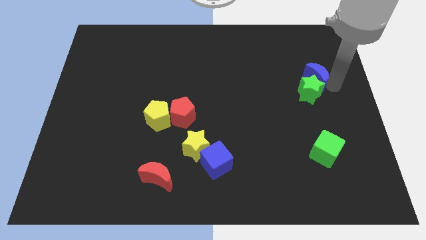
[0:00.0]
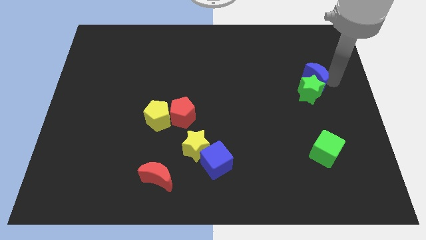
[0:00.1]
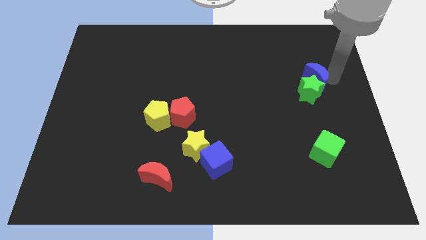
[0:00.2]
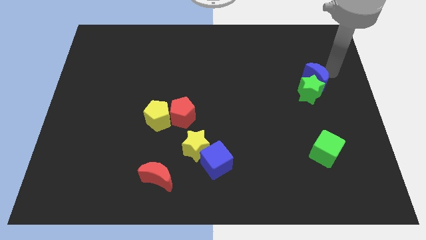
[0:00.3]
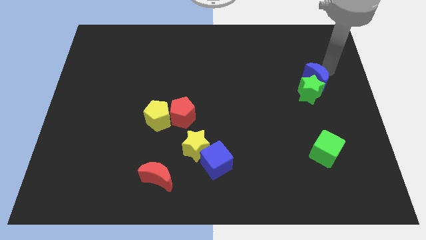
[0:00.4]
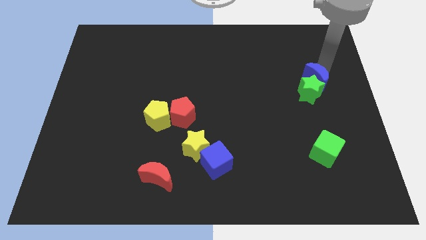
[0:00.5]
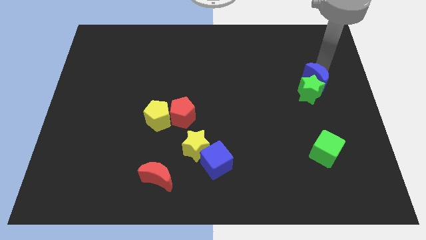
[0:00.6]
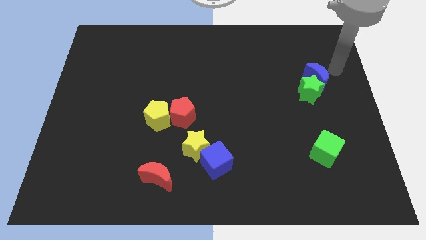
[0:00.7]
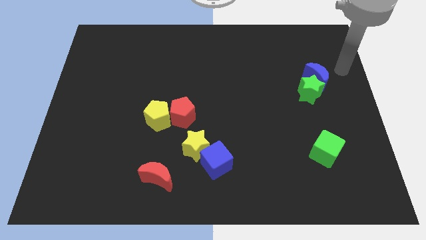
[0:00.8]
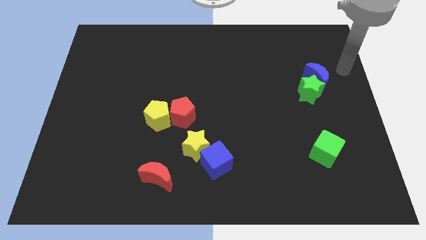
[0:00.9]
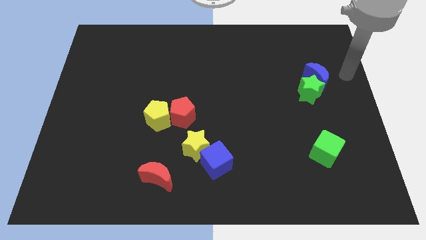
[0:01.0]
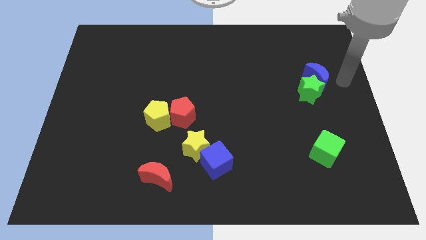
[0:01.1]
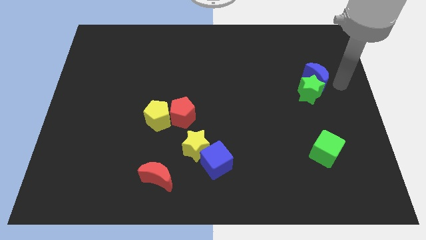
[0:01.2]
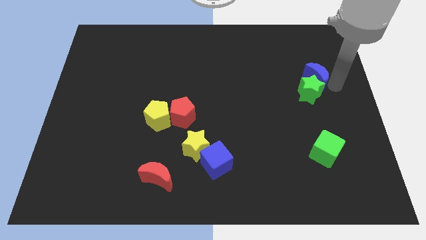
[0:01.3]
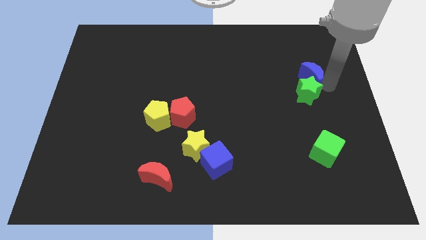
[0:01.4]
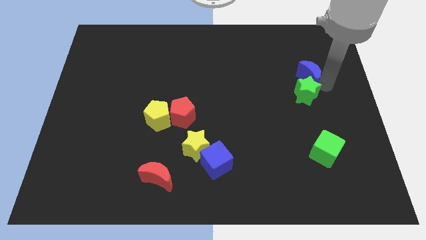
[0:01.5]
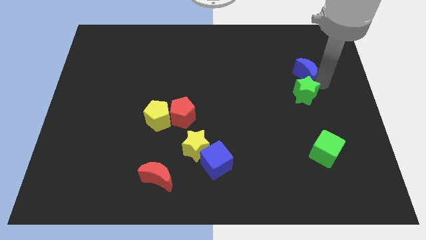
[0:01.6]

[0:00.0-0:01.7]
push the blue crescent to the top of the green star

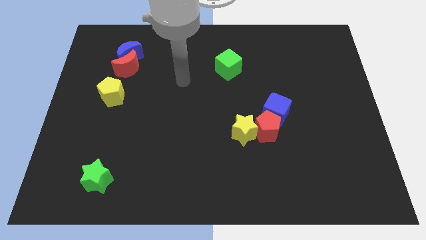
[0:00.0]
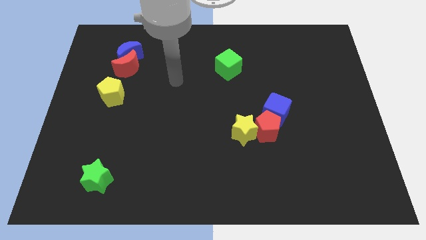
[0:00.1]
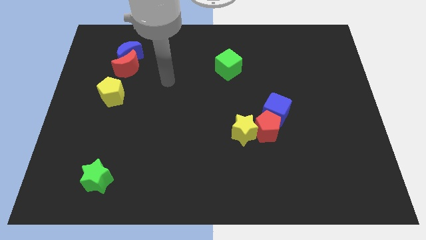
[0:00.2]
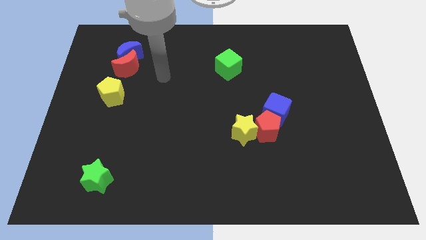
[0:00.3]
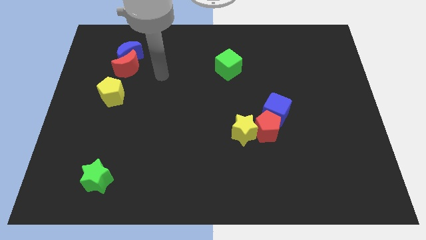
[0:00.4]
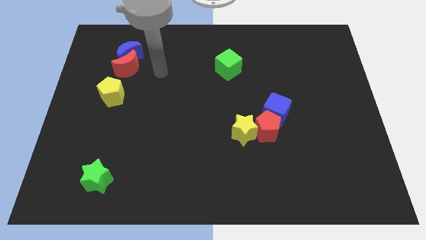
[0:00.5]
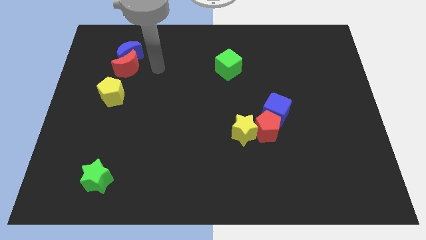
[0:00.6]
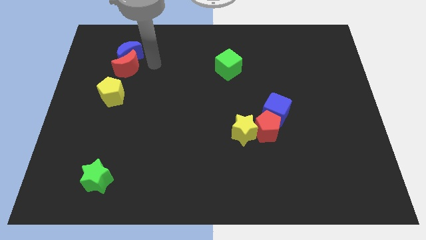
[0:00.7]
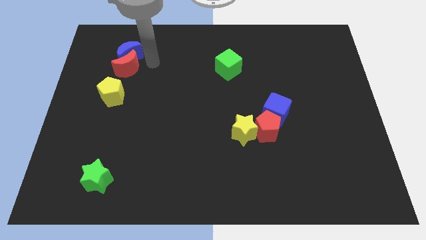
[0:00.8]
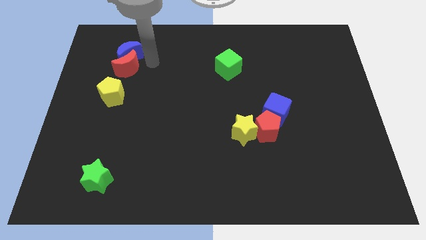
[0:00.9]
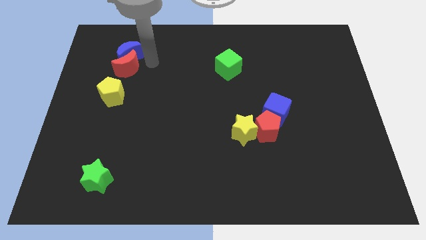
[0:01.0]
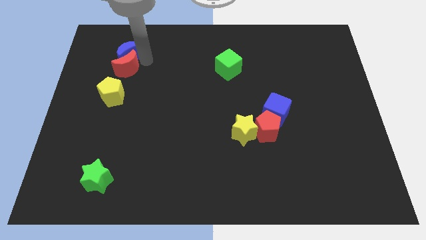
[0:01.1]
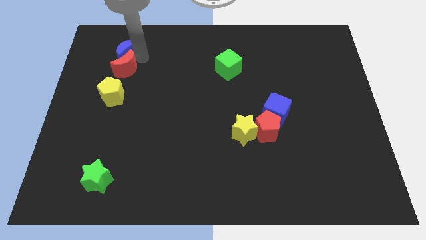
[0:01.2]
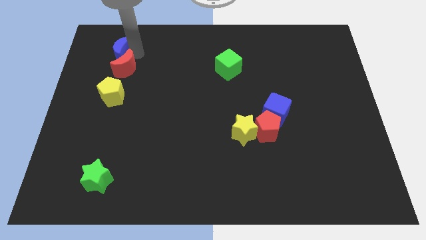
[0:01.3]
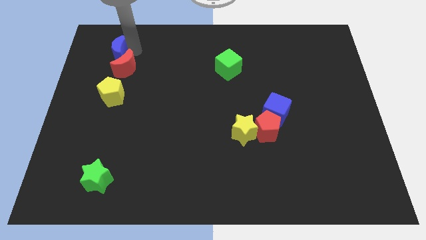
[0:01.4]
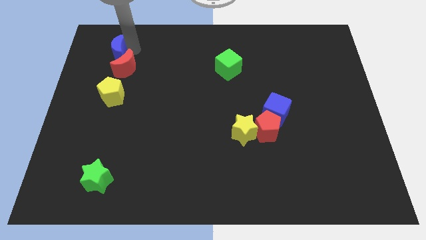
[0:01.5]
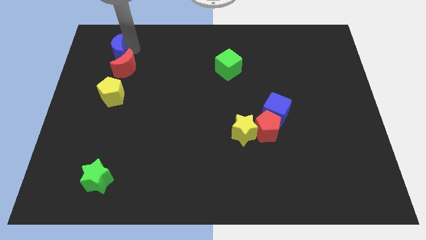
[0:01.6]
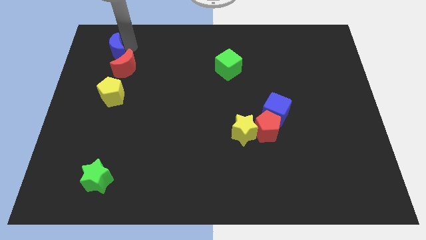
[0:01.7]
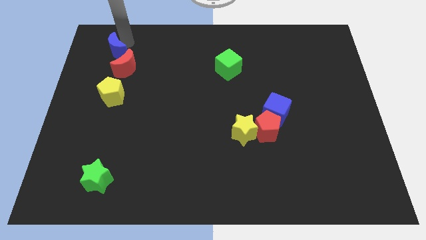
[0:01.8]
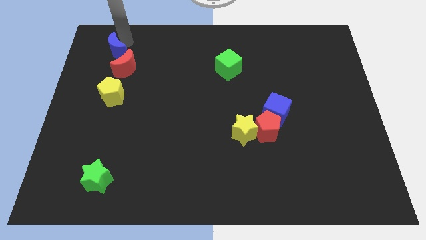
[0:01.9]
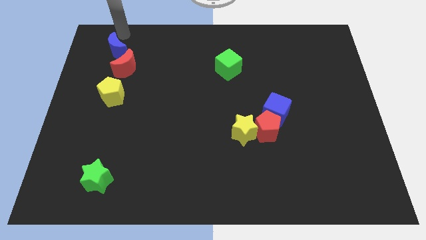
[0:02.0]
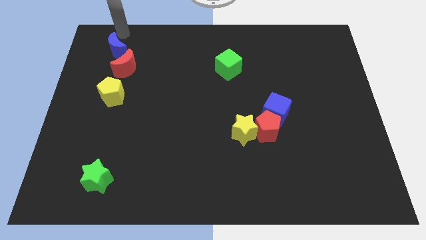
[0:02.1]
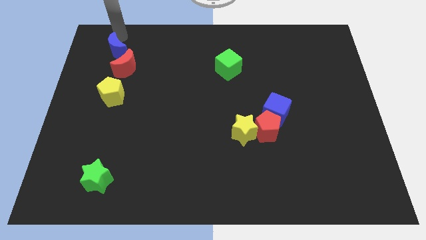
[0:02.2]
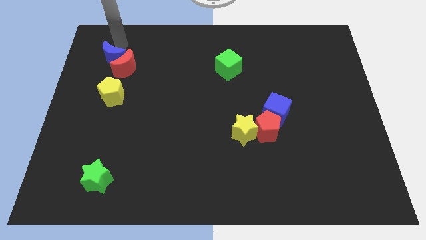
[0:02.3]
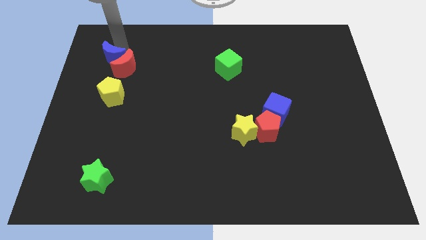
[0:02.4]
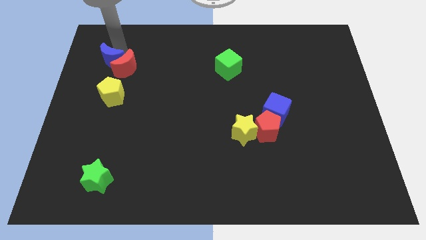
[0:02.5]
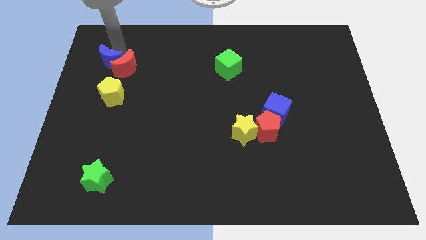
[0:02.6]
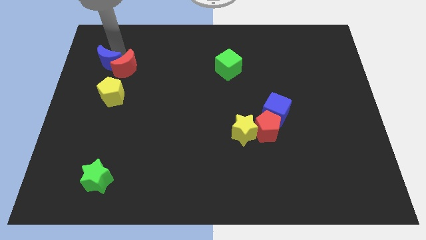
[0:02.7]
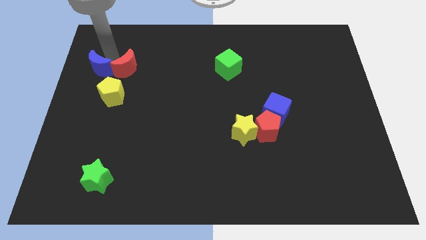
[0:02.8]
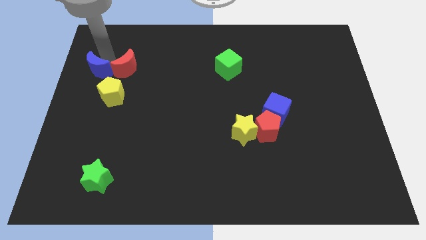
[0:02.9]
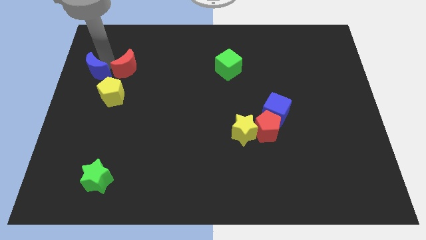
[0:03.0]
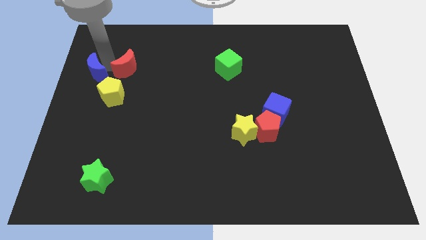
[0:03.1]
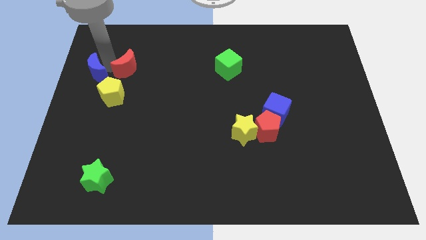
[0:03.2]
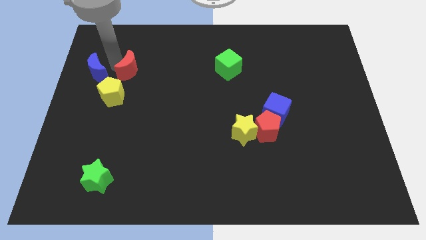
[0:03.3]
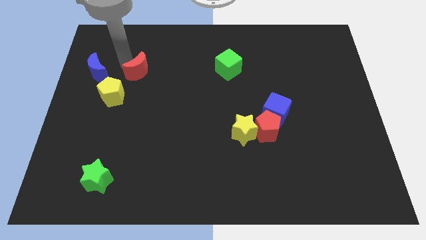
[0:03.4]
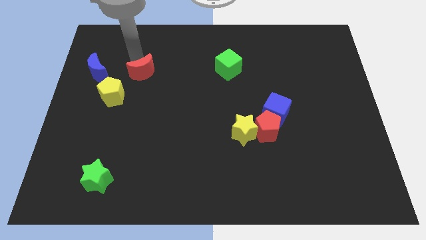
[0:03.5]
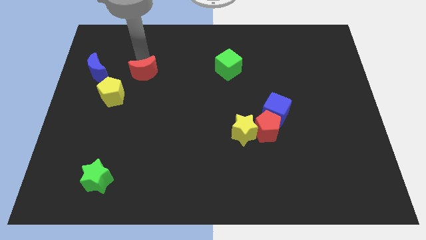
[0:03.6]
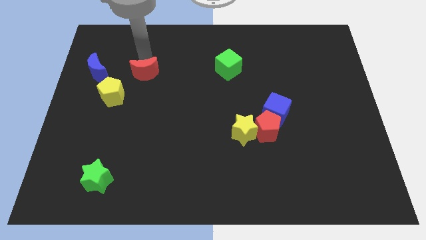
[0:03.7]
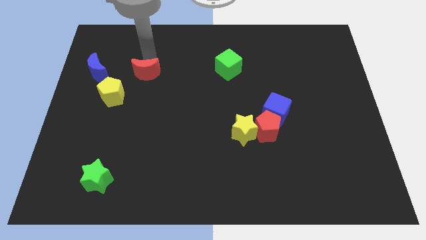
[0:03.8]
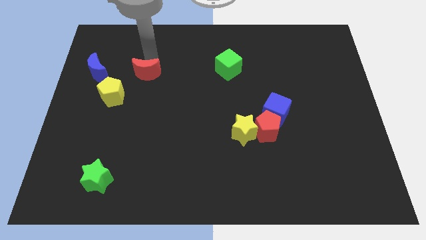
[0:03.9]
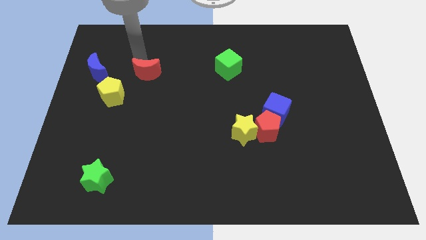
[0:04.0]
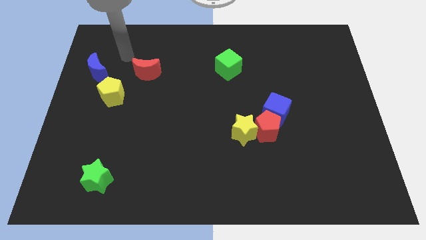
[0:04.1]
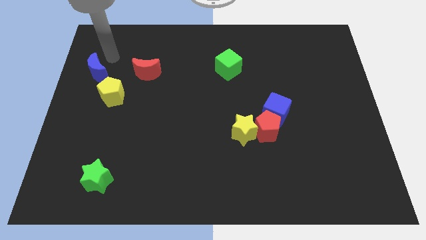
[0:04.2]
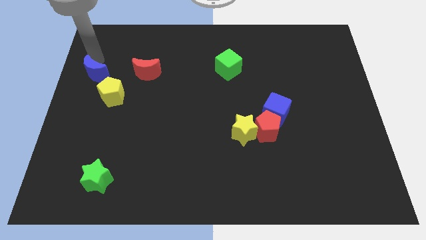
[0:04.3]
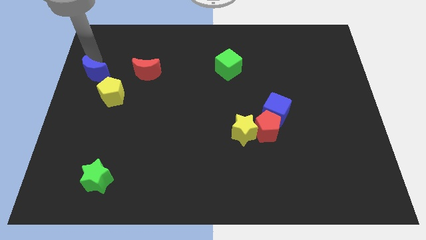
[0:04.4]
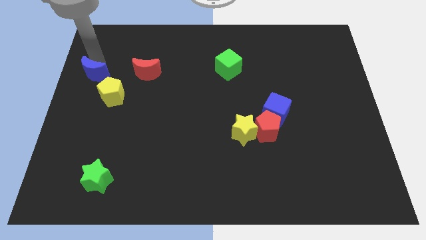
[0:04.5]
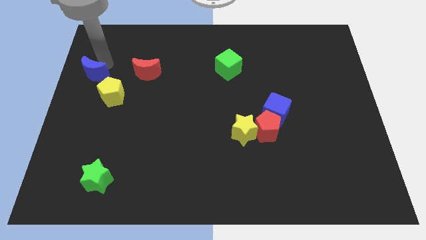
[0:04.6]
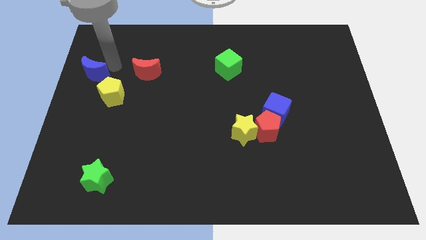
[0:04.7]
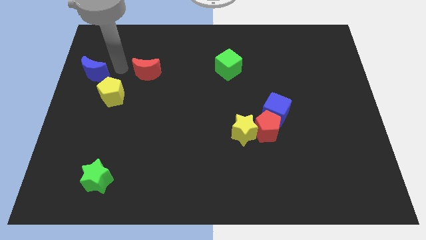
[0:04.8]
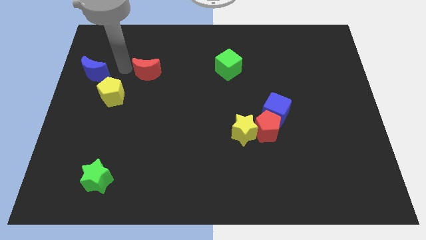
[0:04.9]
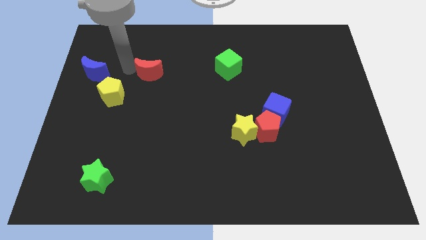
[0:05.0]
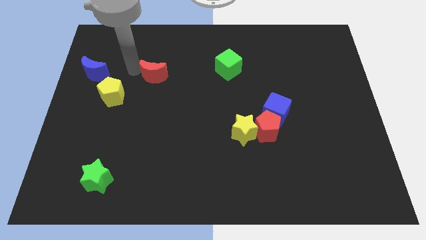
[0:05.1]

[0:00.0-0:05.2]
separate the red moon and blue moon

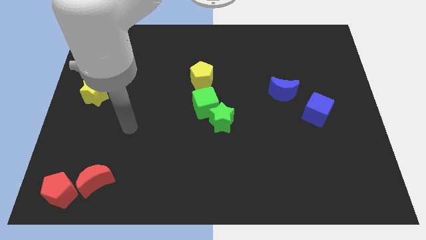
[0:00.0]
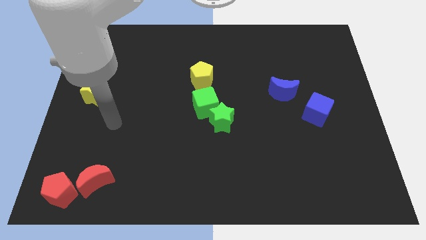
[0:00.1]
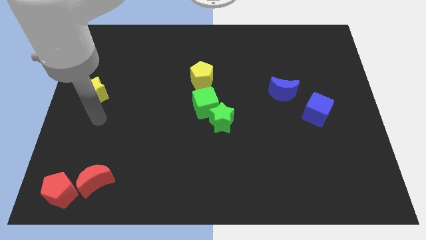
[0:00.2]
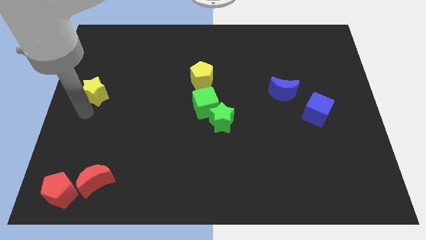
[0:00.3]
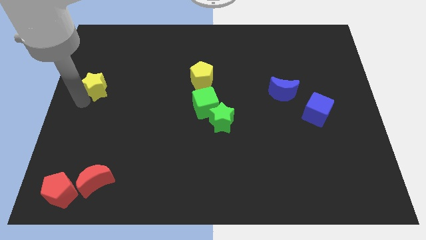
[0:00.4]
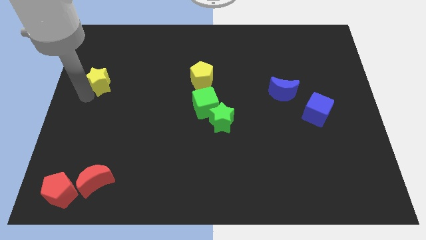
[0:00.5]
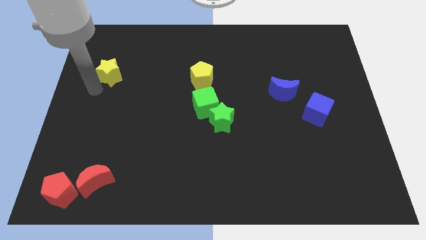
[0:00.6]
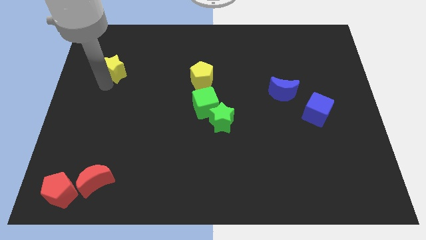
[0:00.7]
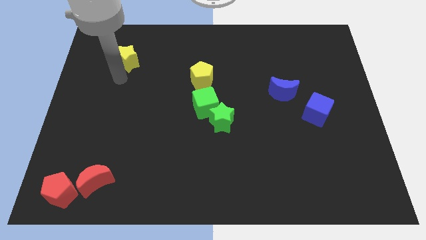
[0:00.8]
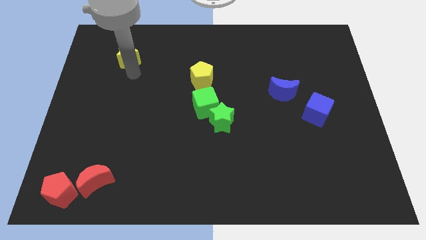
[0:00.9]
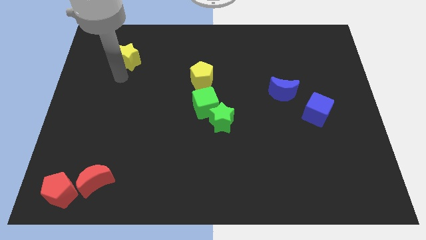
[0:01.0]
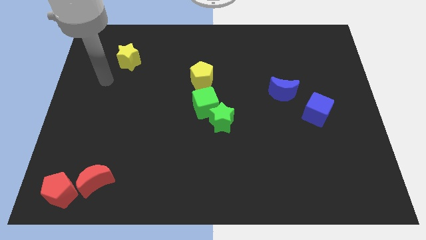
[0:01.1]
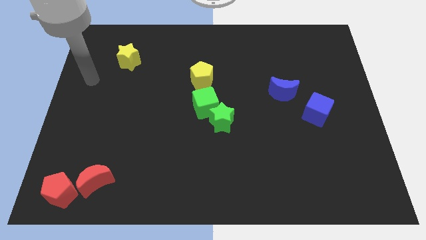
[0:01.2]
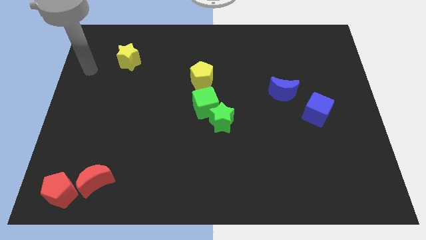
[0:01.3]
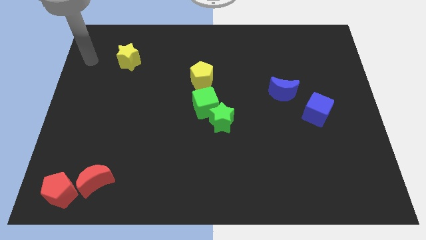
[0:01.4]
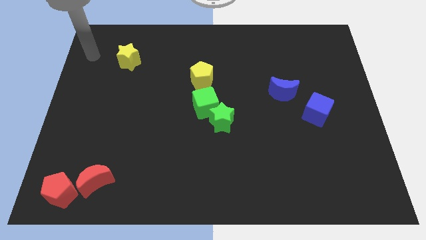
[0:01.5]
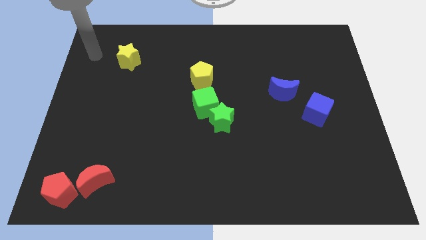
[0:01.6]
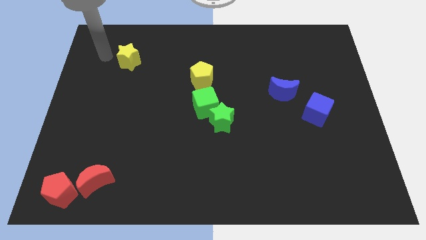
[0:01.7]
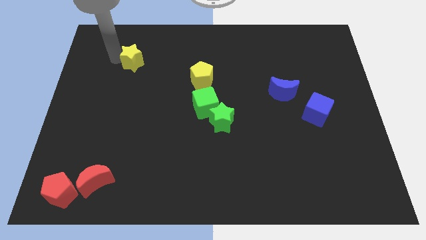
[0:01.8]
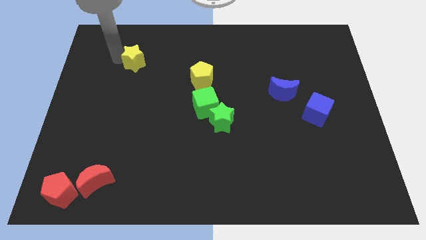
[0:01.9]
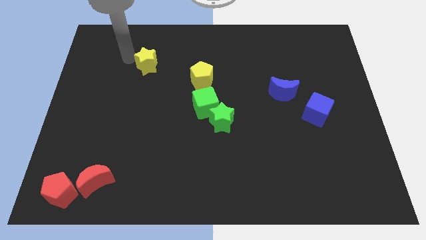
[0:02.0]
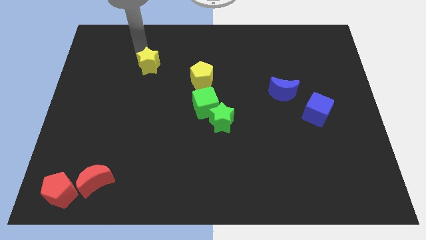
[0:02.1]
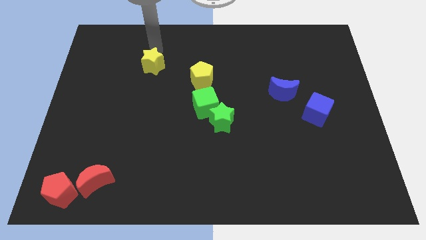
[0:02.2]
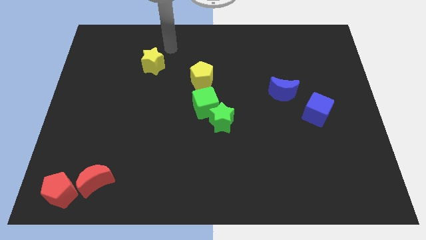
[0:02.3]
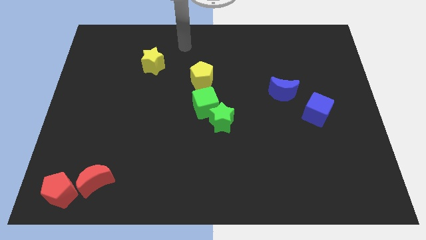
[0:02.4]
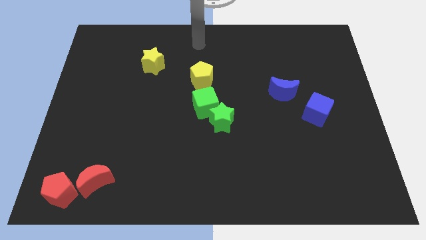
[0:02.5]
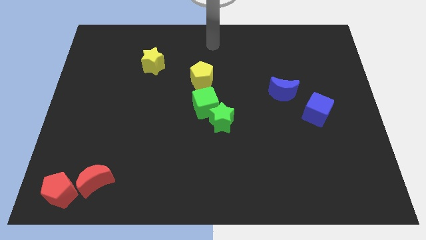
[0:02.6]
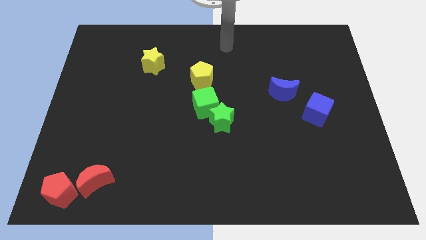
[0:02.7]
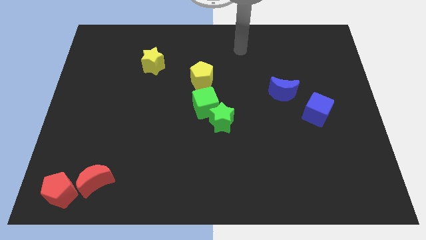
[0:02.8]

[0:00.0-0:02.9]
push the yellow star at the top left side of the yellow pentagon
